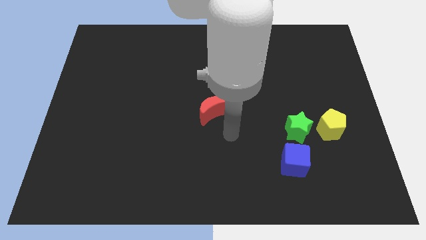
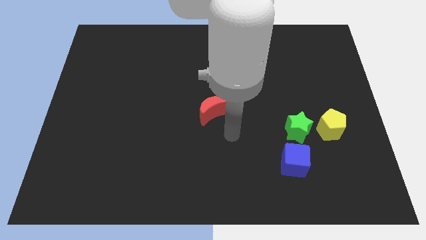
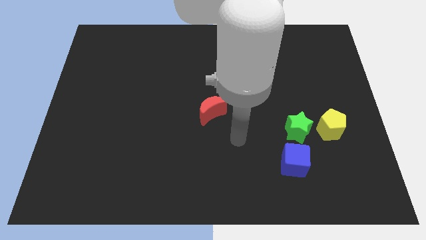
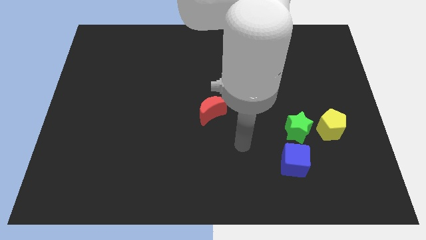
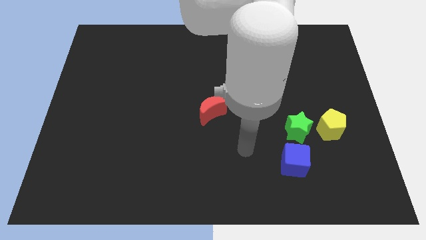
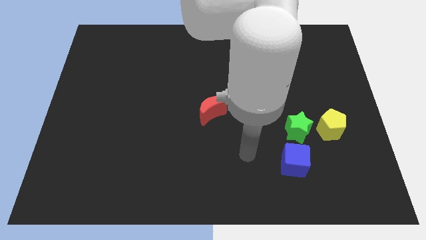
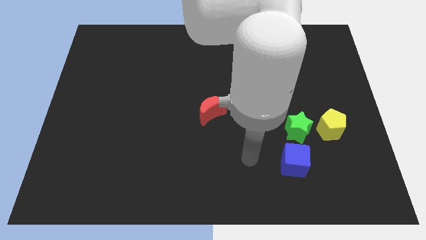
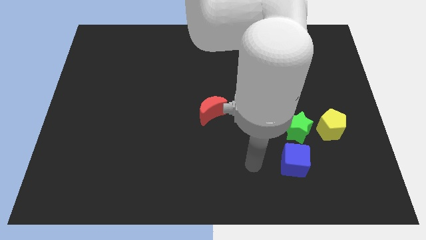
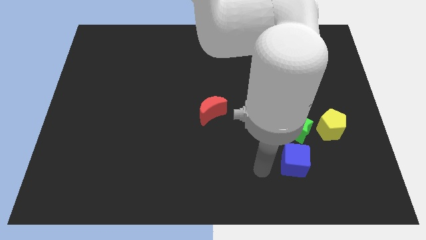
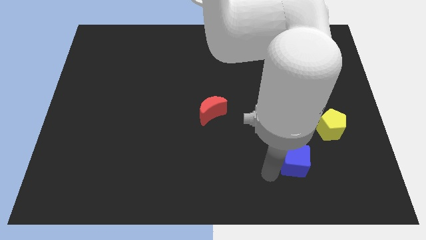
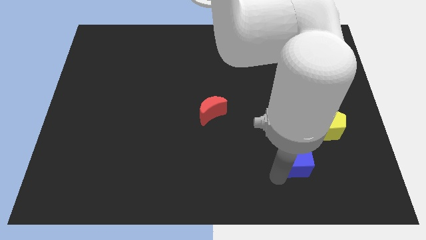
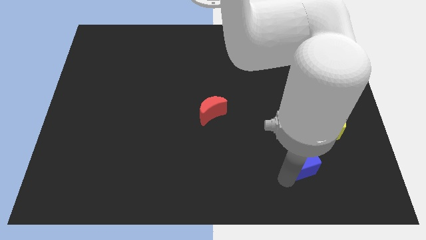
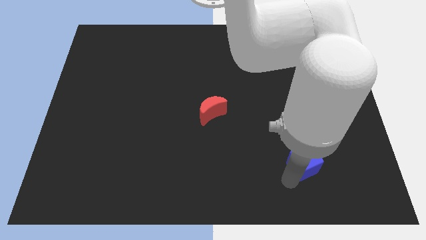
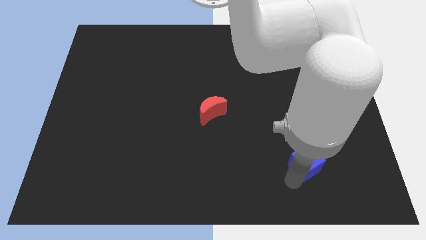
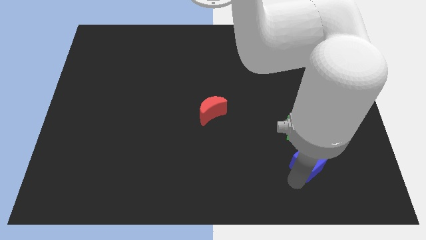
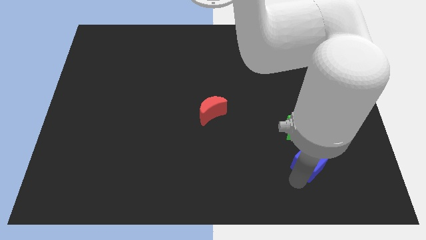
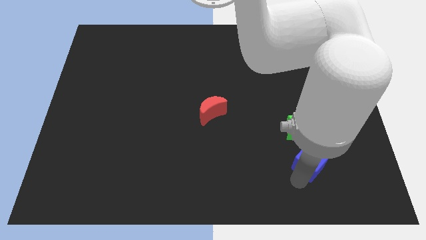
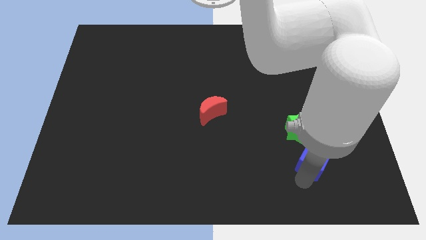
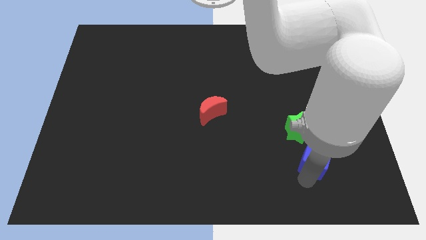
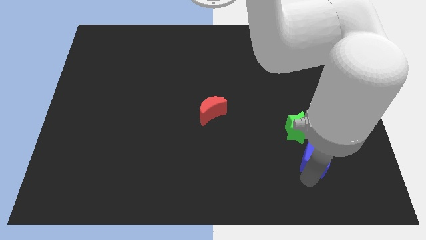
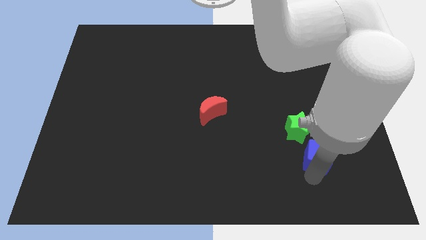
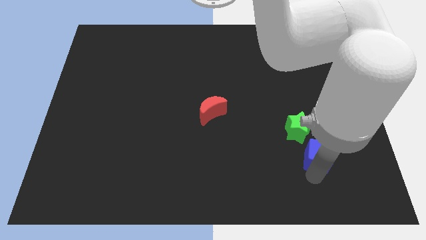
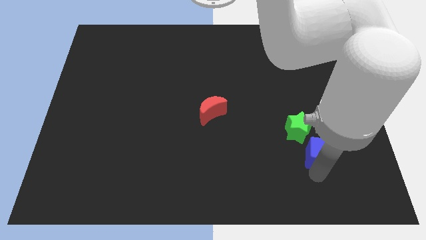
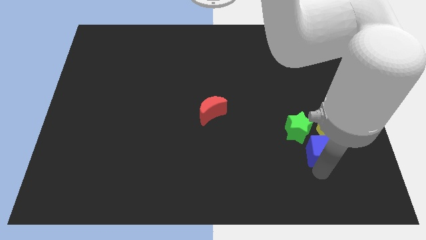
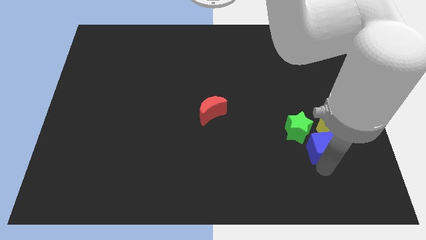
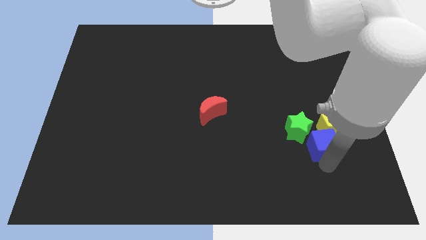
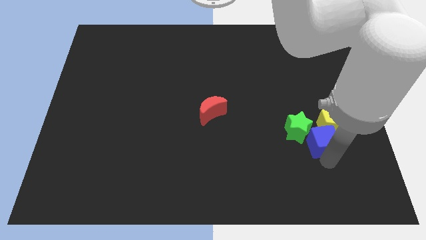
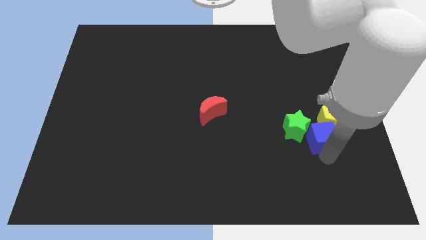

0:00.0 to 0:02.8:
push the blue cube to the green block

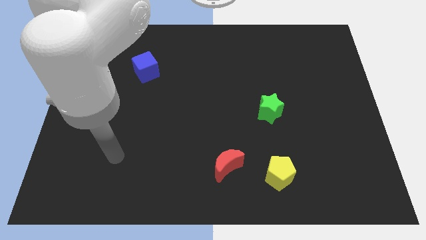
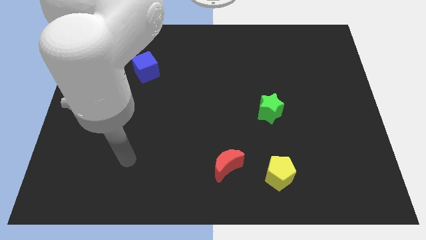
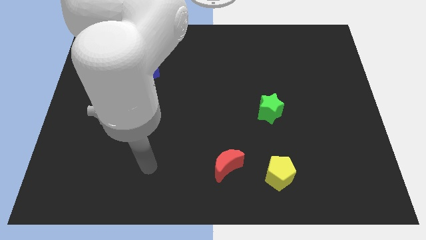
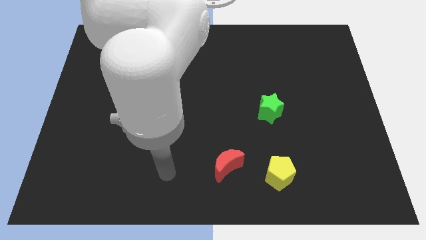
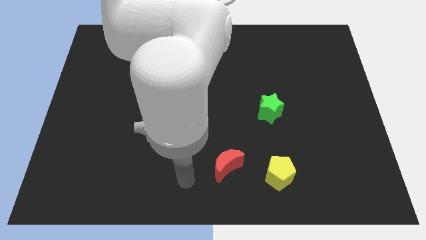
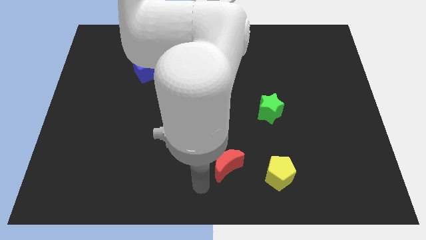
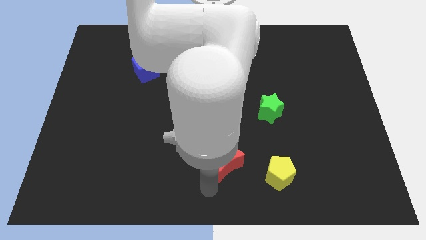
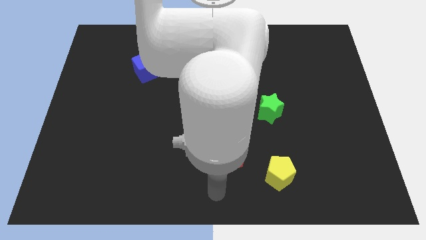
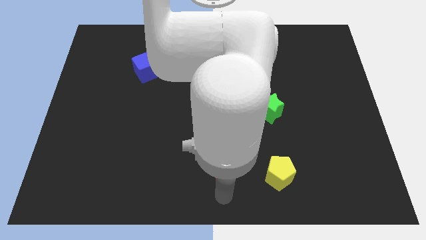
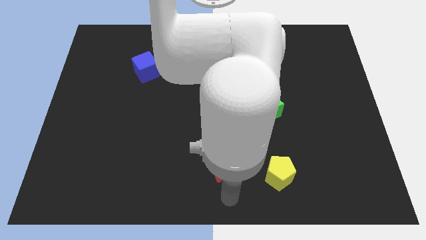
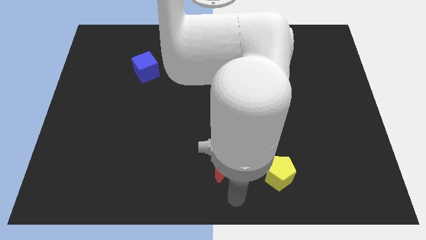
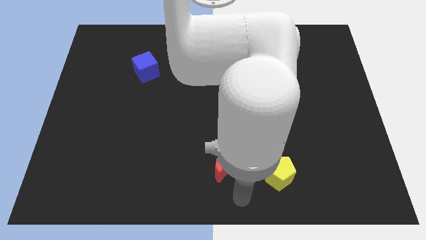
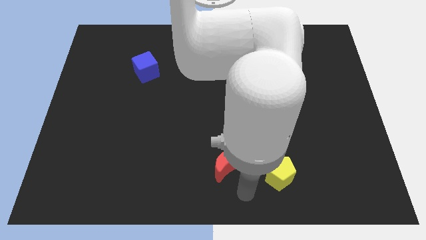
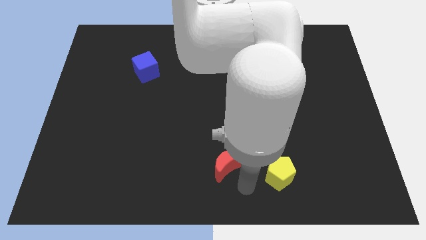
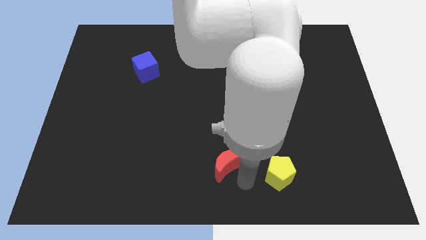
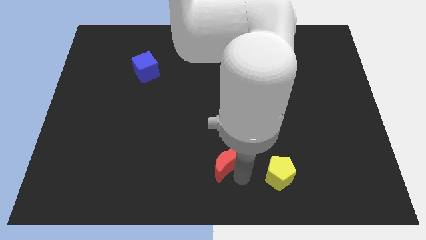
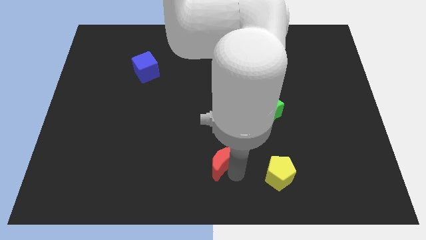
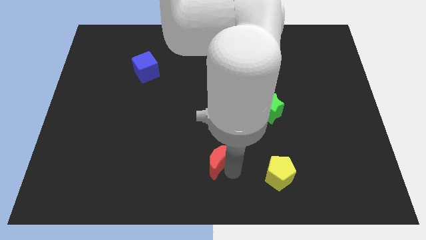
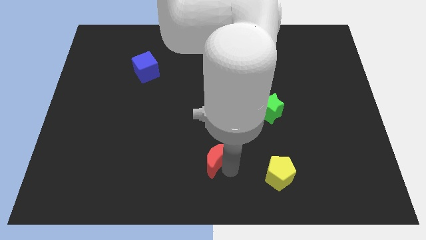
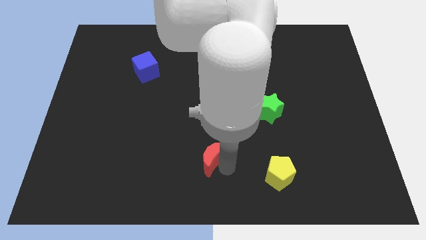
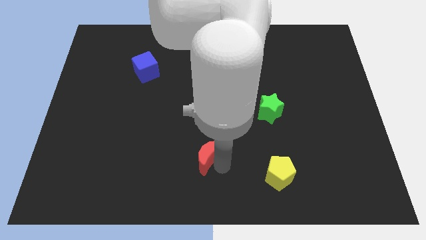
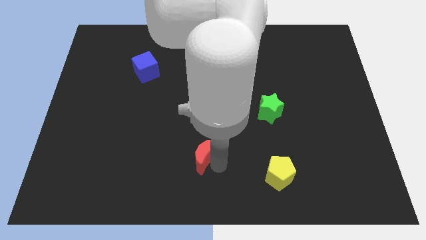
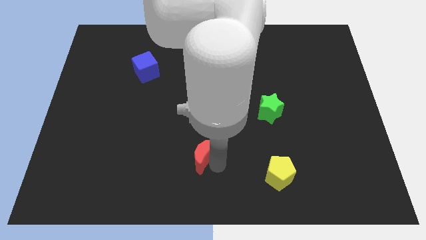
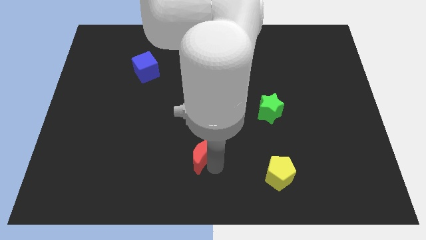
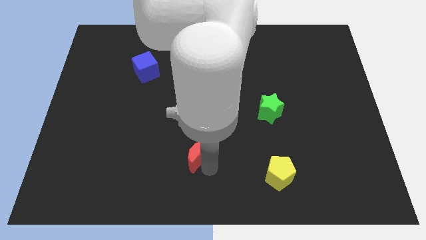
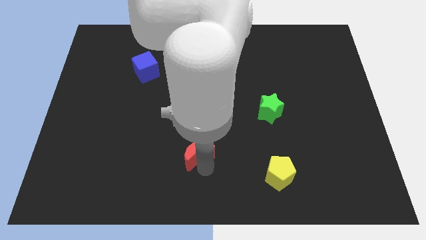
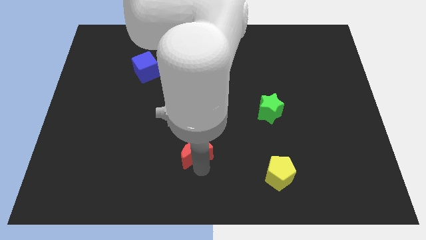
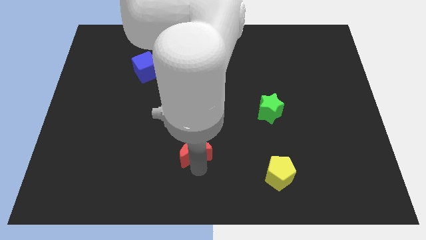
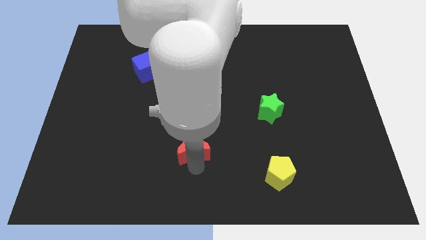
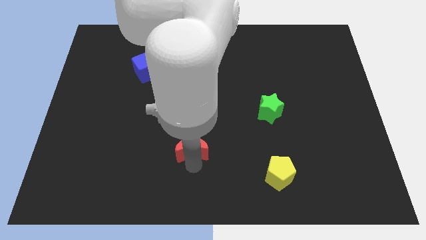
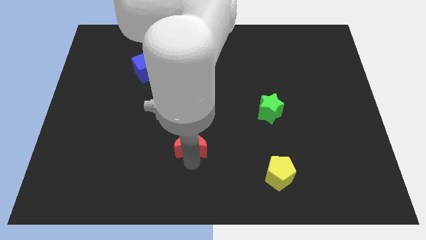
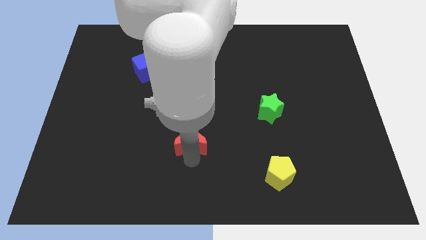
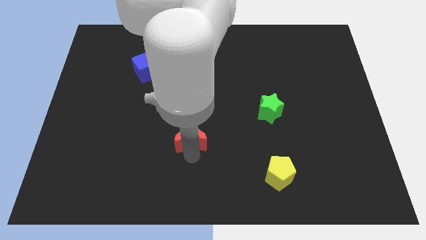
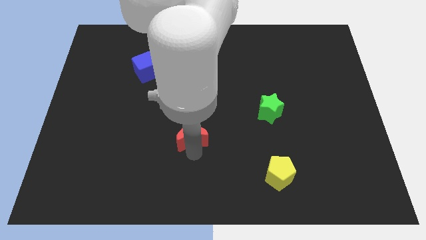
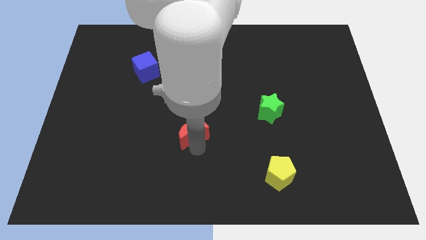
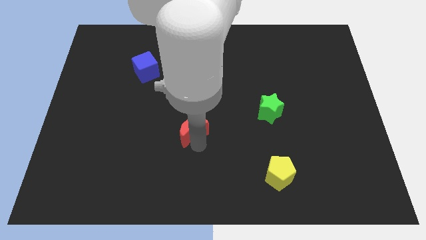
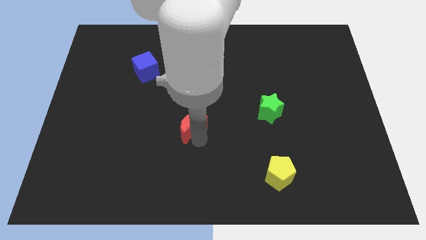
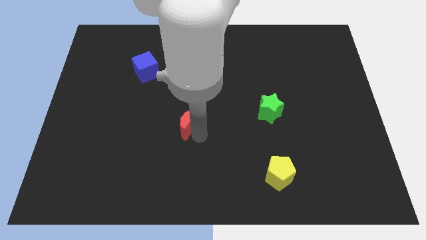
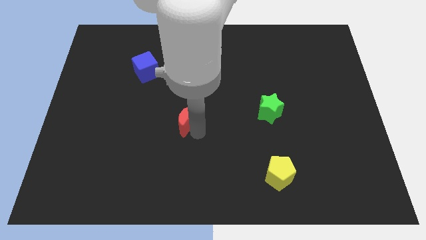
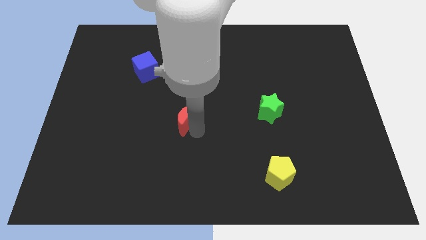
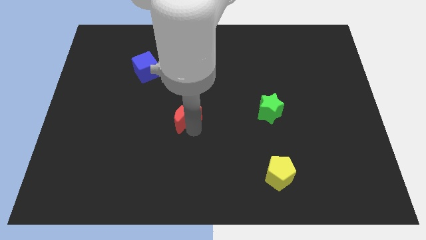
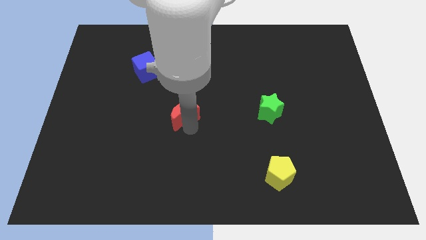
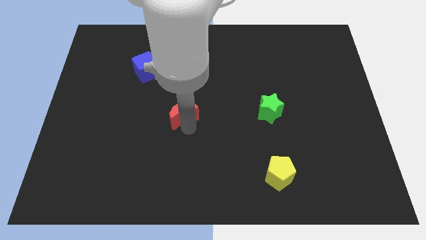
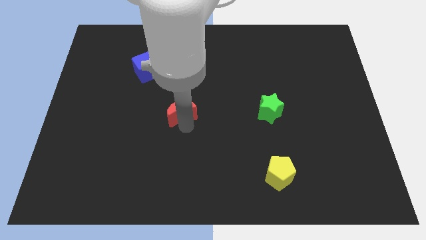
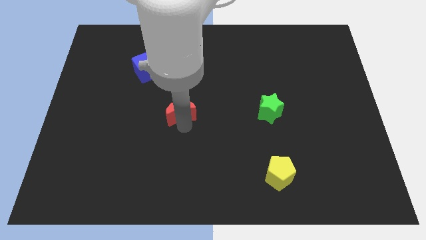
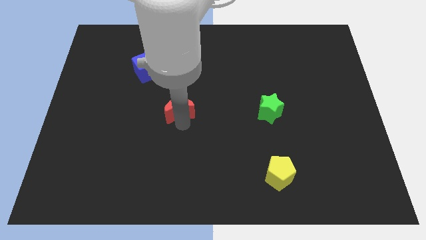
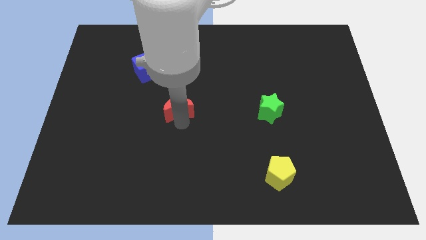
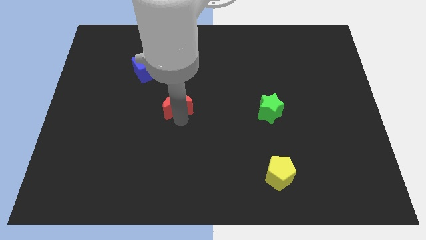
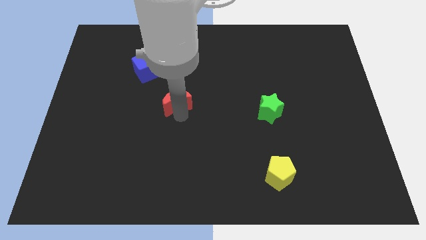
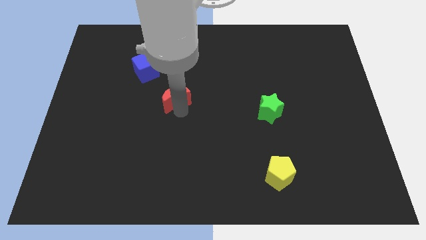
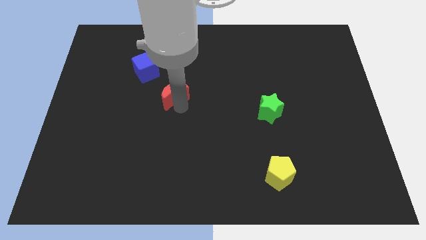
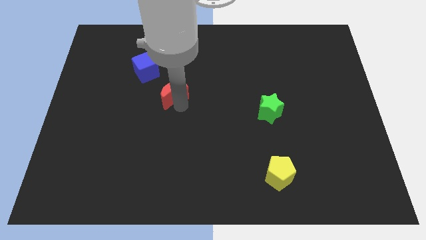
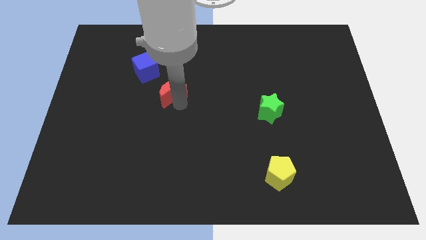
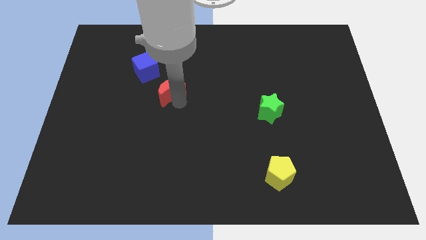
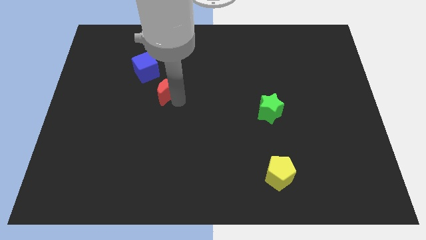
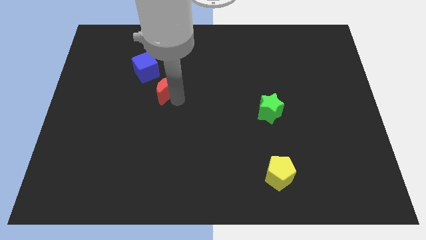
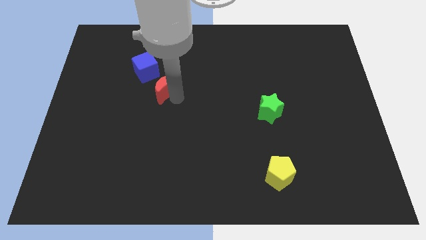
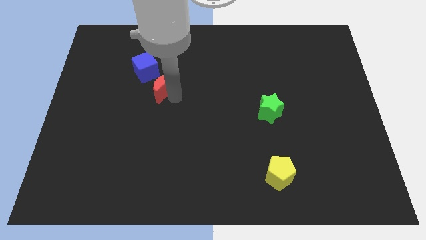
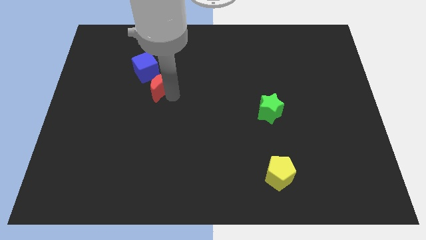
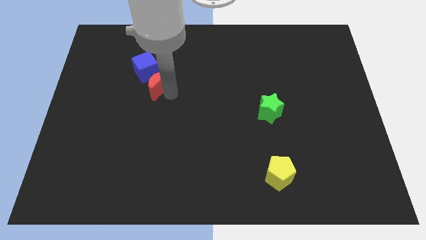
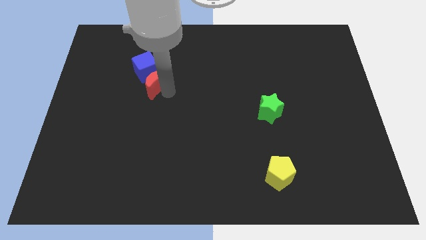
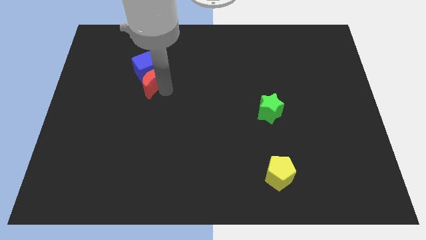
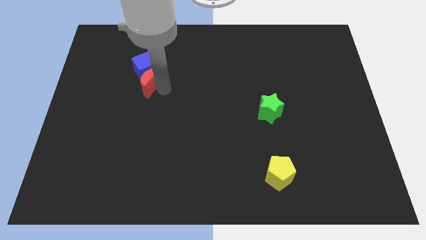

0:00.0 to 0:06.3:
move the moon to the cube
